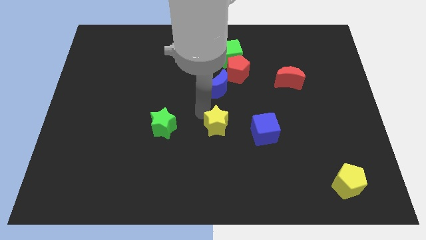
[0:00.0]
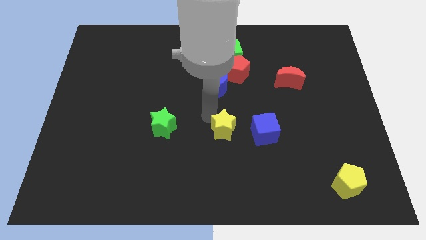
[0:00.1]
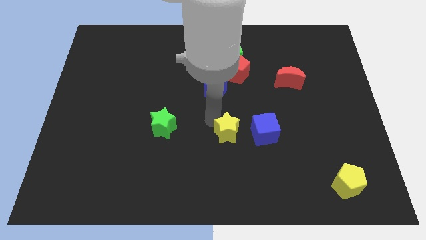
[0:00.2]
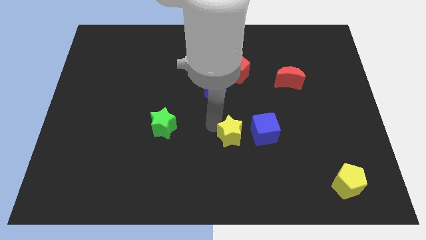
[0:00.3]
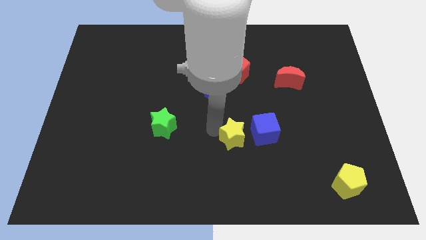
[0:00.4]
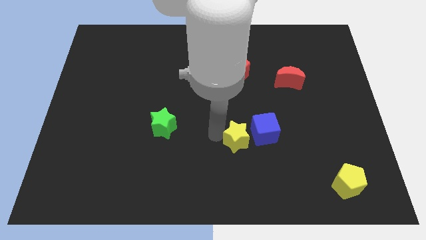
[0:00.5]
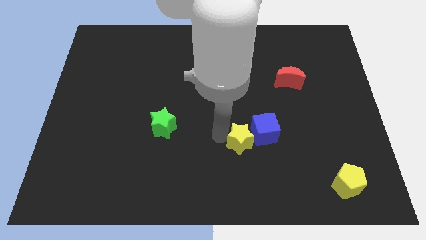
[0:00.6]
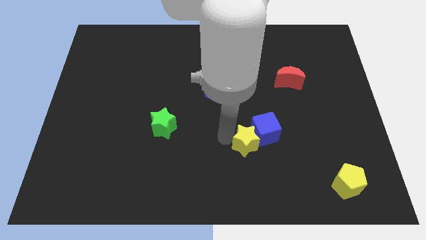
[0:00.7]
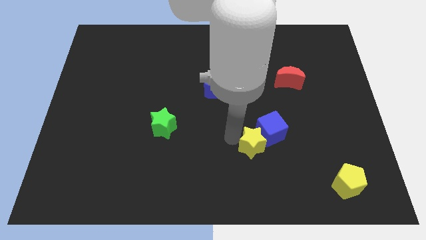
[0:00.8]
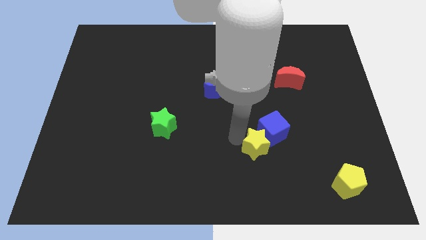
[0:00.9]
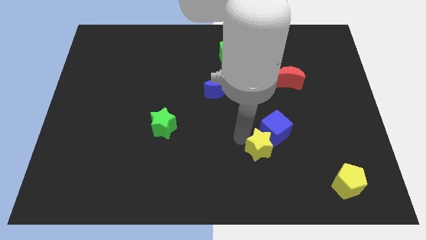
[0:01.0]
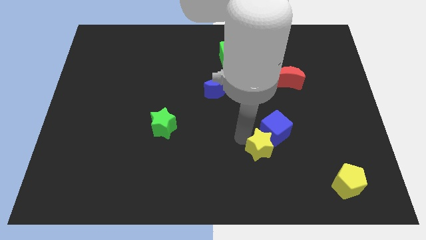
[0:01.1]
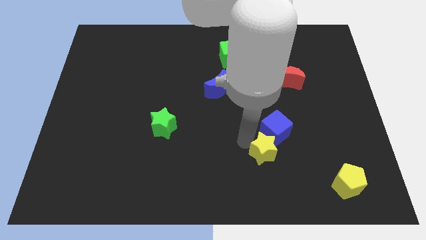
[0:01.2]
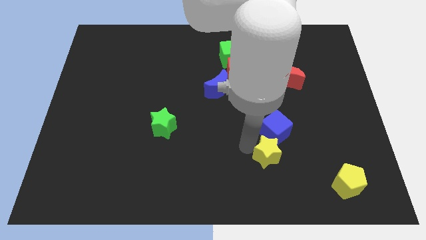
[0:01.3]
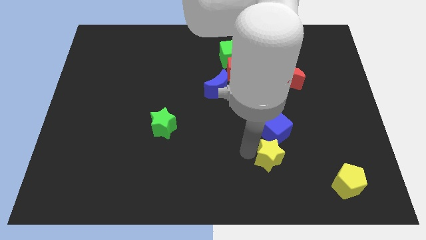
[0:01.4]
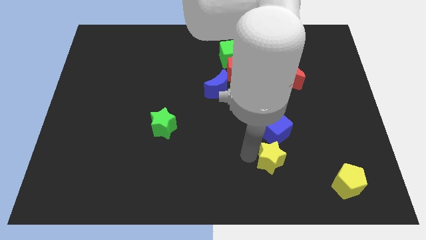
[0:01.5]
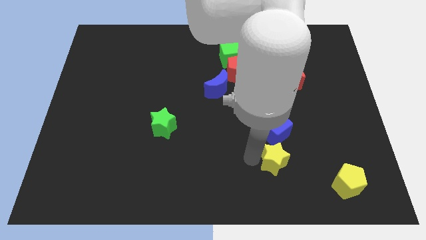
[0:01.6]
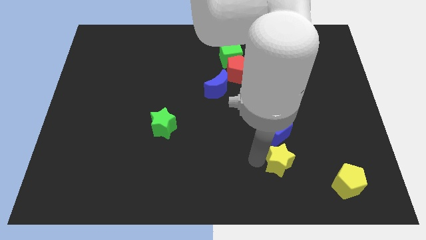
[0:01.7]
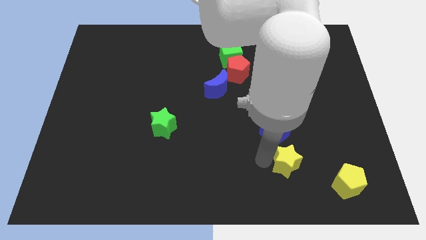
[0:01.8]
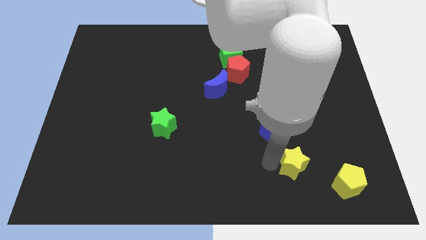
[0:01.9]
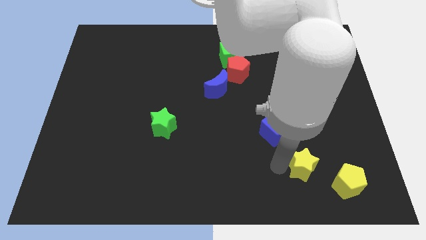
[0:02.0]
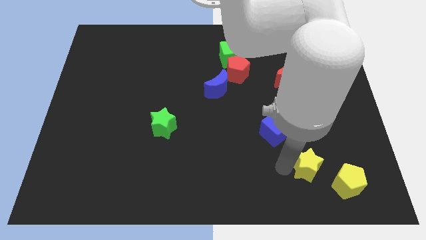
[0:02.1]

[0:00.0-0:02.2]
push the yellow star towards the yellow pentagon

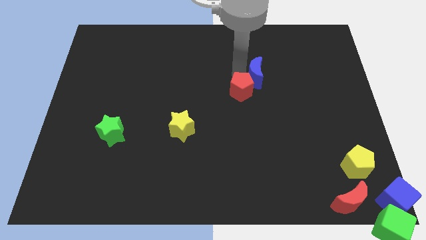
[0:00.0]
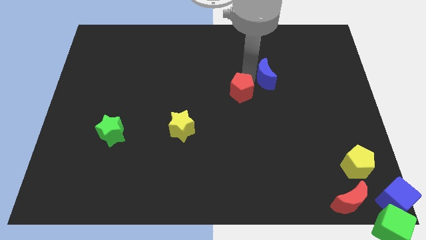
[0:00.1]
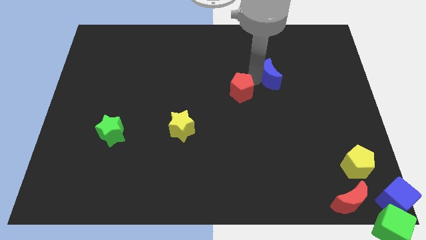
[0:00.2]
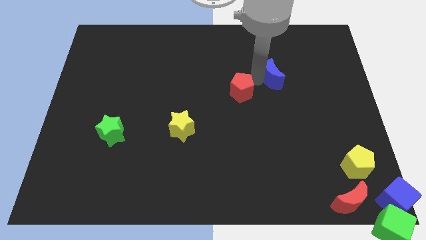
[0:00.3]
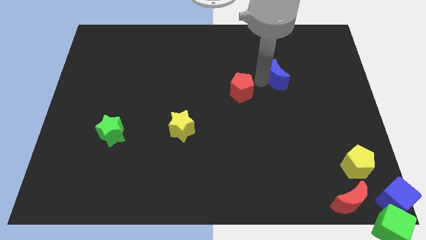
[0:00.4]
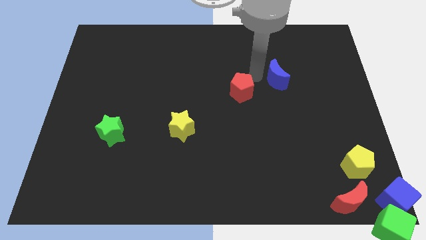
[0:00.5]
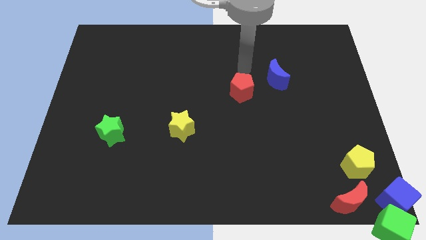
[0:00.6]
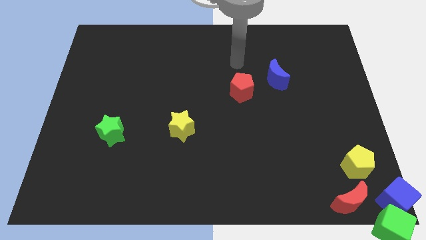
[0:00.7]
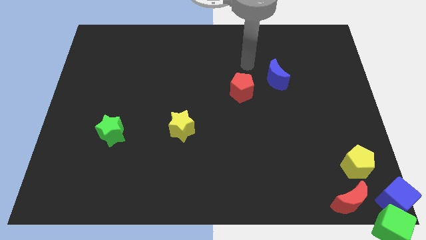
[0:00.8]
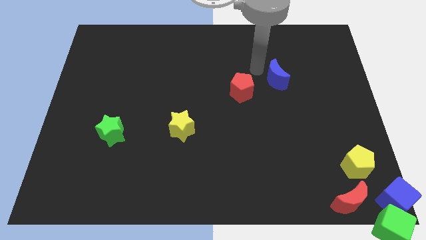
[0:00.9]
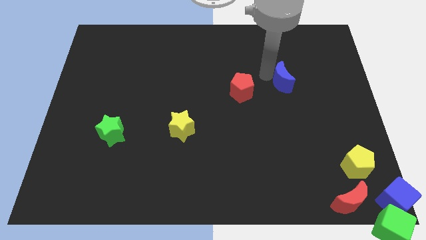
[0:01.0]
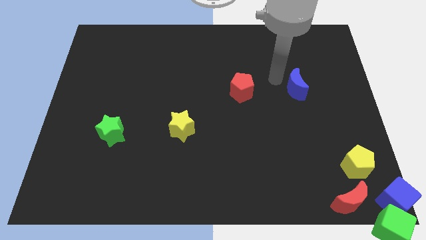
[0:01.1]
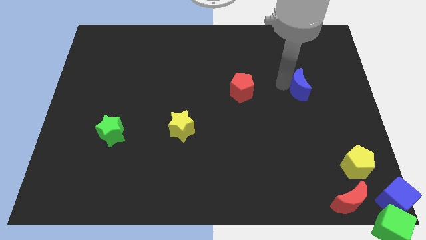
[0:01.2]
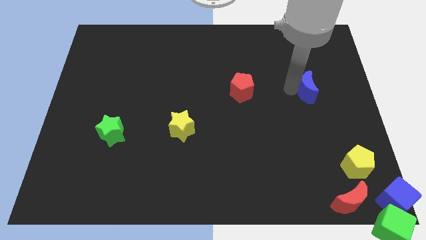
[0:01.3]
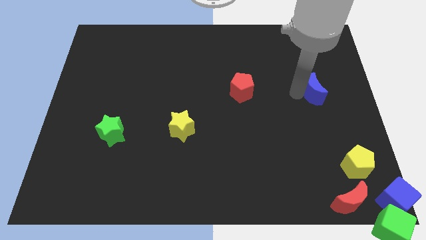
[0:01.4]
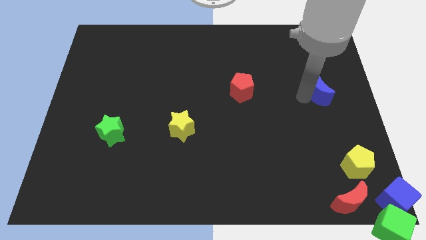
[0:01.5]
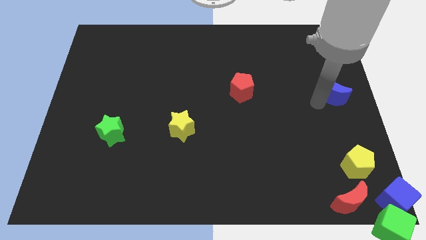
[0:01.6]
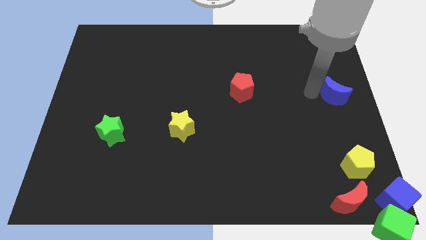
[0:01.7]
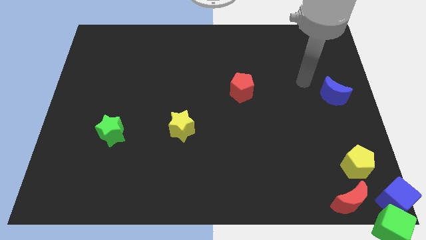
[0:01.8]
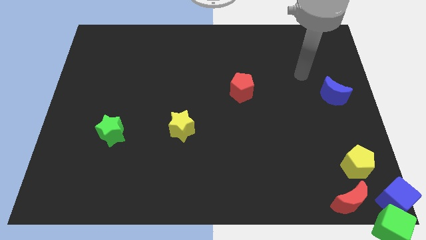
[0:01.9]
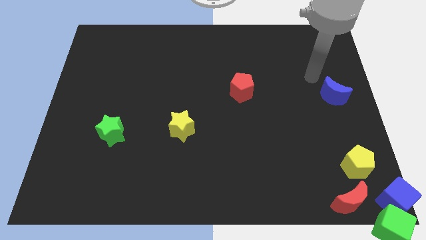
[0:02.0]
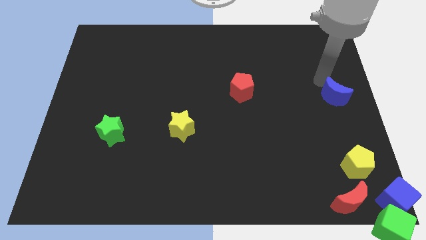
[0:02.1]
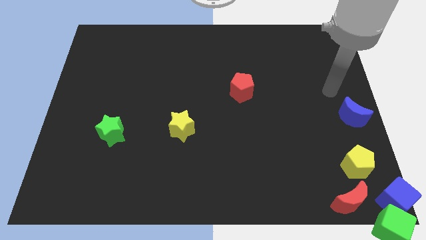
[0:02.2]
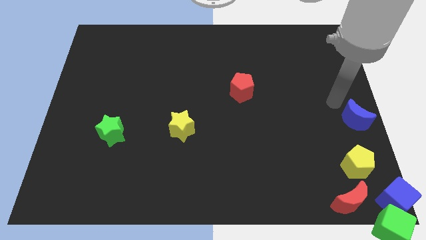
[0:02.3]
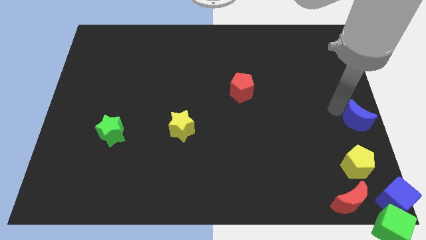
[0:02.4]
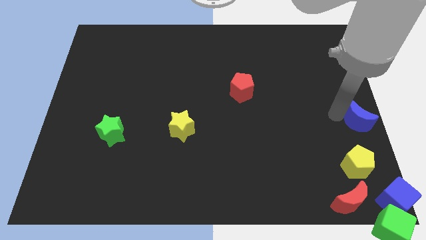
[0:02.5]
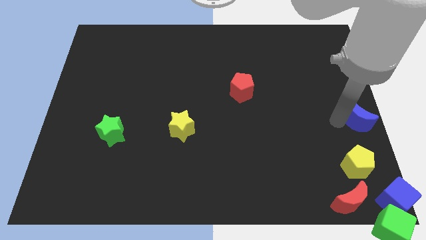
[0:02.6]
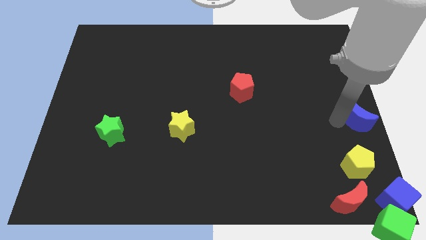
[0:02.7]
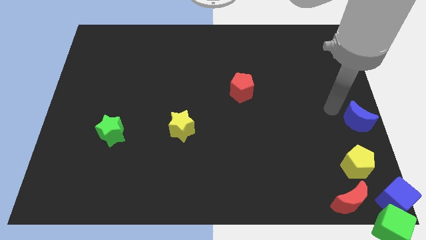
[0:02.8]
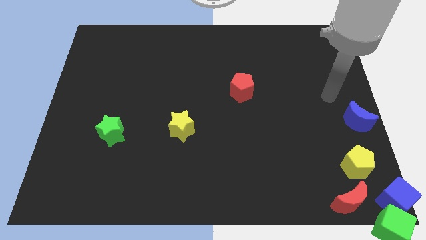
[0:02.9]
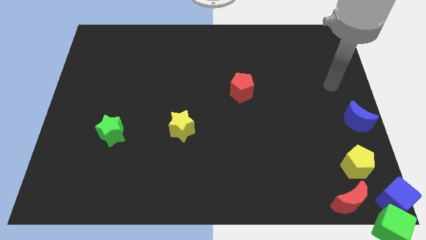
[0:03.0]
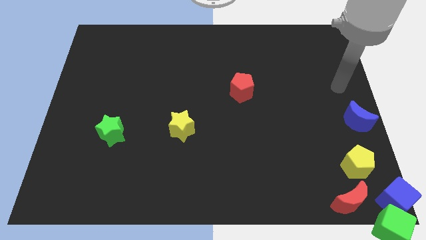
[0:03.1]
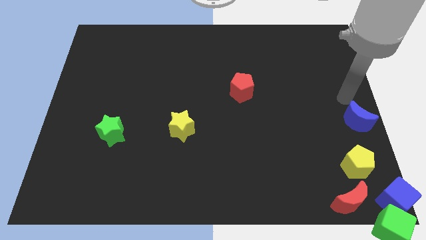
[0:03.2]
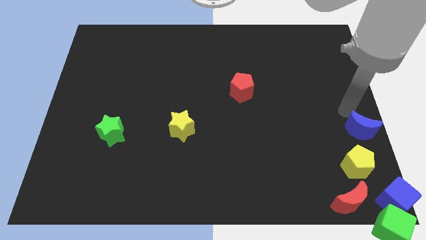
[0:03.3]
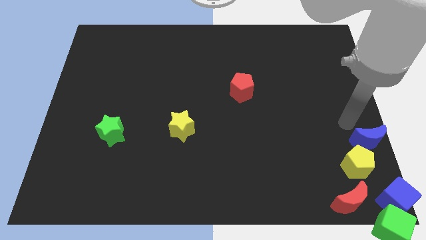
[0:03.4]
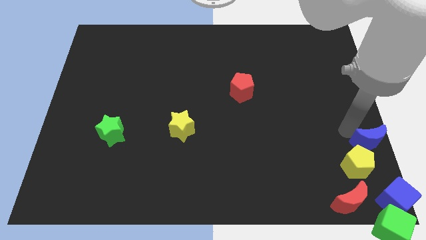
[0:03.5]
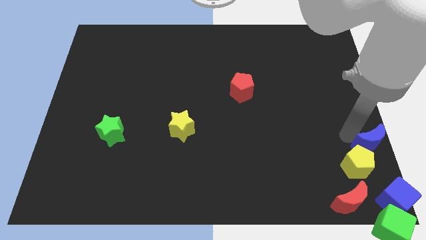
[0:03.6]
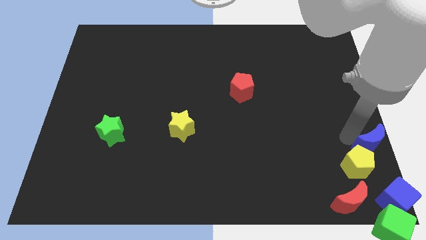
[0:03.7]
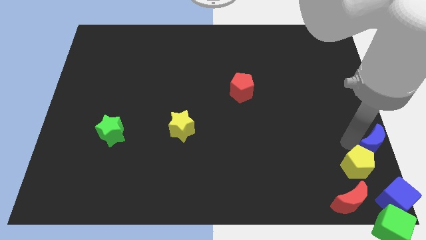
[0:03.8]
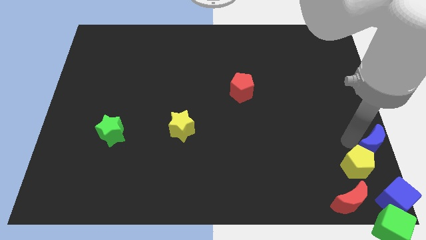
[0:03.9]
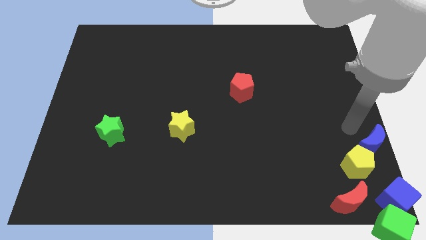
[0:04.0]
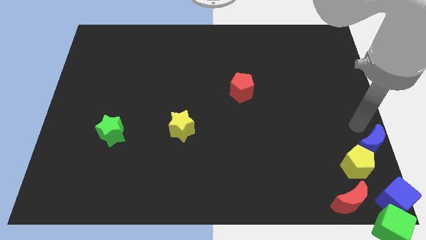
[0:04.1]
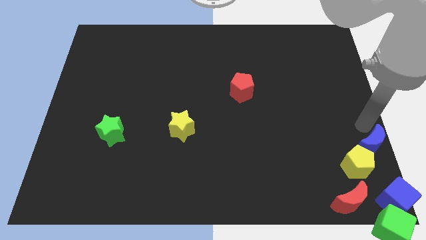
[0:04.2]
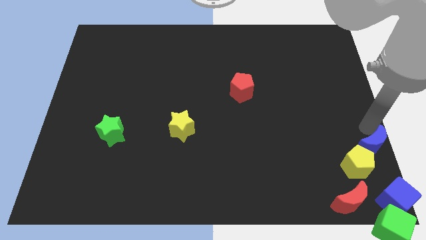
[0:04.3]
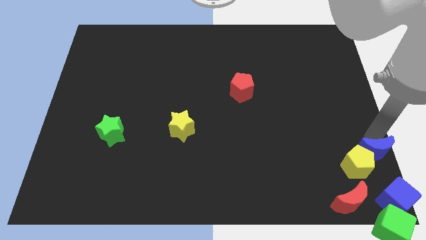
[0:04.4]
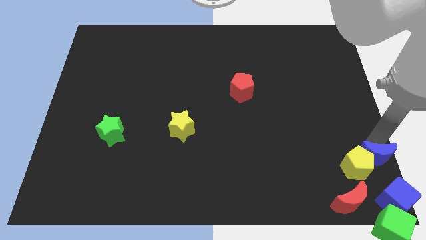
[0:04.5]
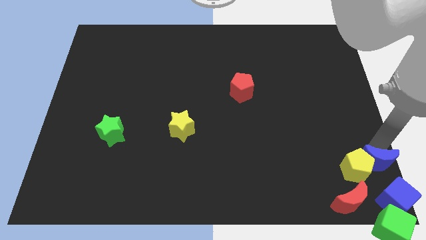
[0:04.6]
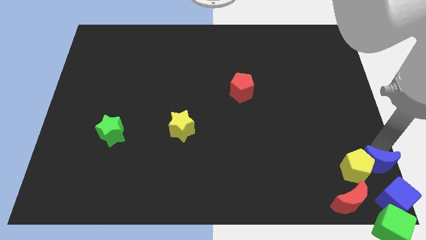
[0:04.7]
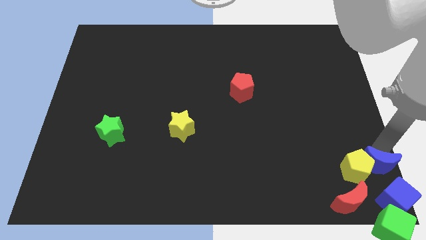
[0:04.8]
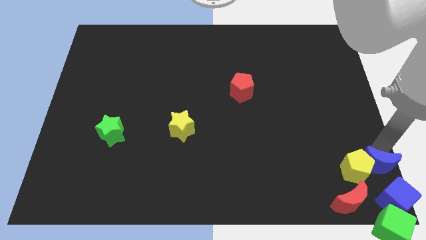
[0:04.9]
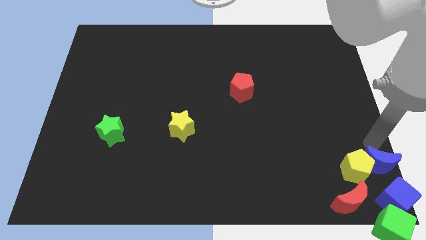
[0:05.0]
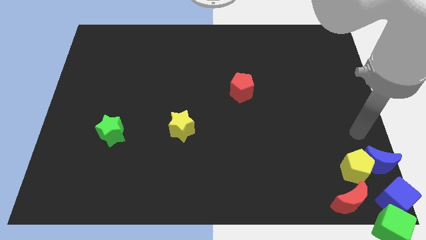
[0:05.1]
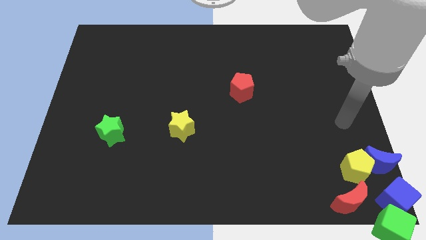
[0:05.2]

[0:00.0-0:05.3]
push the blue moon into yellow pentagon

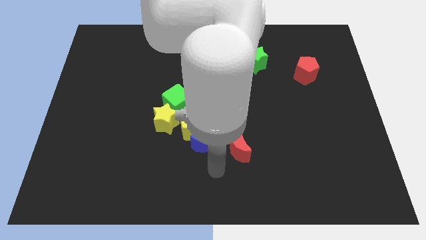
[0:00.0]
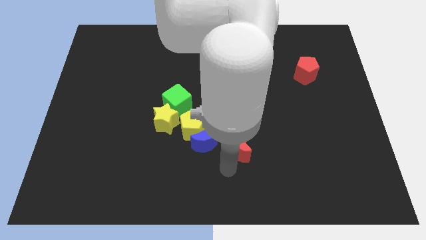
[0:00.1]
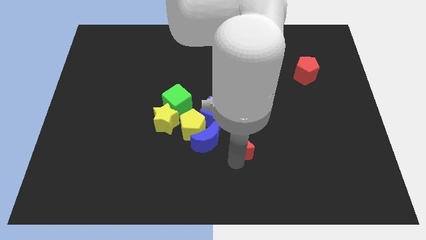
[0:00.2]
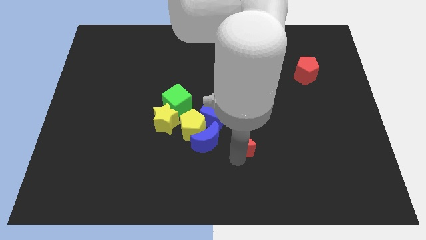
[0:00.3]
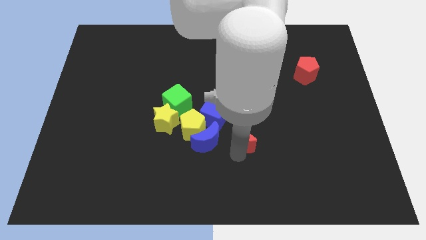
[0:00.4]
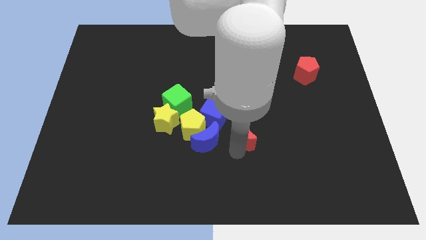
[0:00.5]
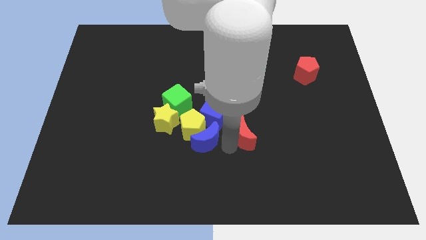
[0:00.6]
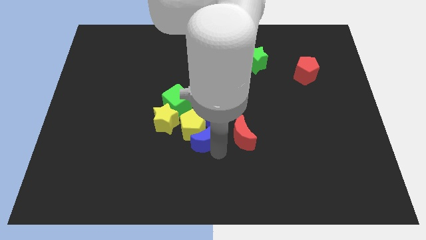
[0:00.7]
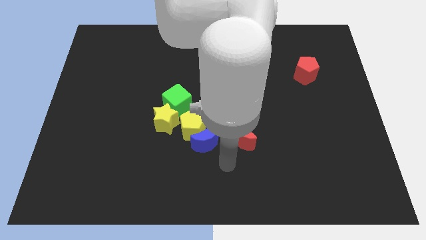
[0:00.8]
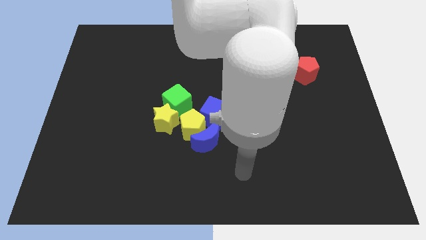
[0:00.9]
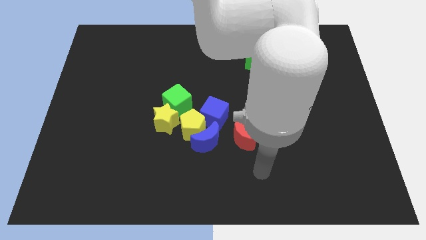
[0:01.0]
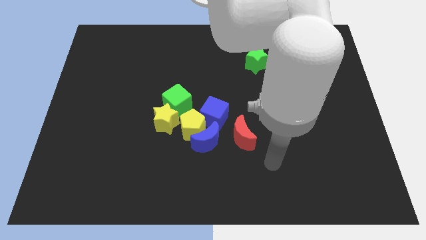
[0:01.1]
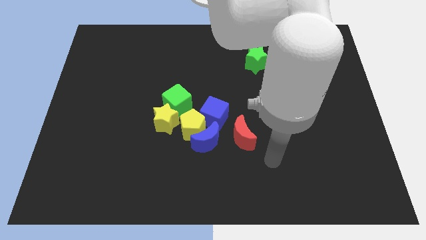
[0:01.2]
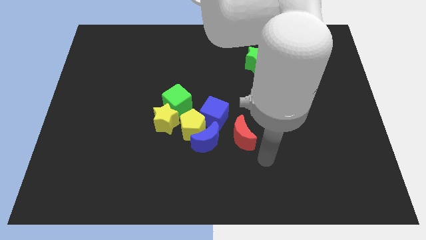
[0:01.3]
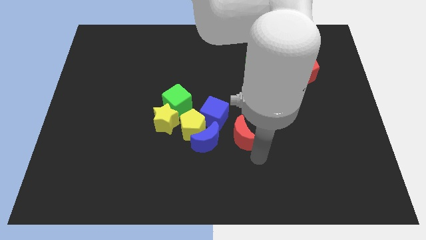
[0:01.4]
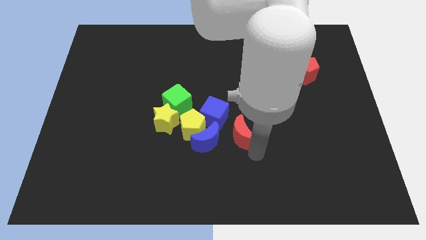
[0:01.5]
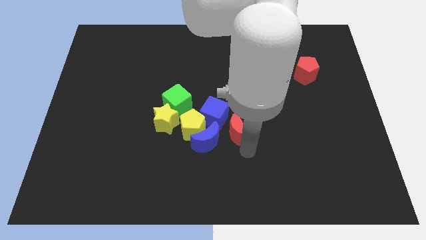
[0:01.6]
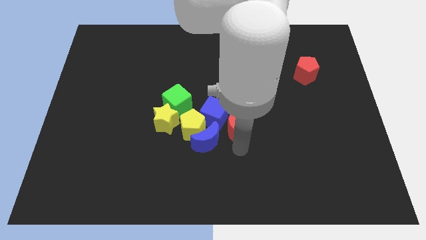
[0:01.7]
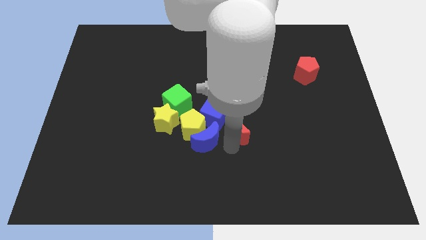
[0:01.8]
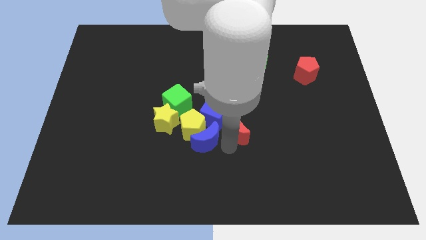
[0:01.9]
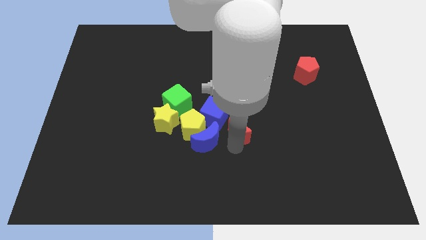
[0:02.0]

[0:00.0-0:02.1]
push the red crescent slightly towards the right side of the blue cube
